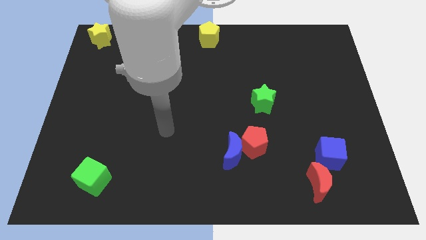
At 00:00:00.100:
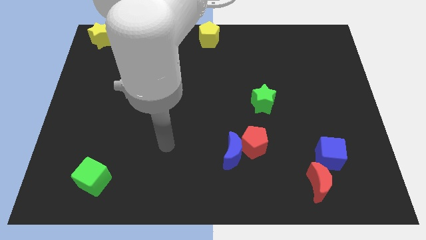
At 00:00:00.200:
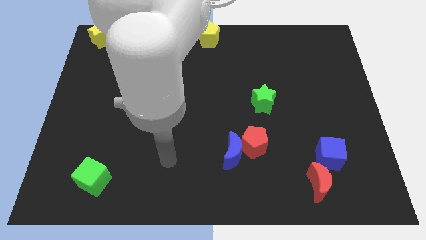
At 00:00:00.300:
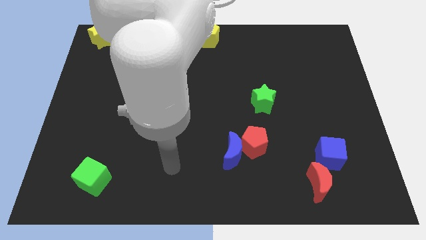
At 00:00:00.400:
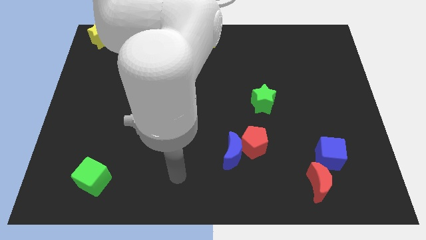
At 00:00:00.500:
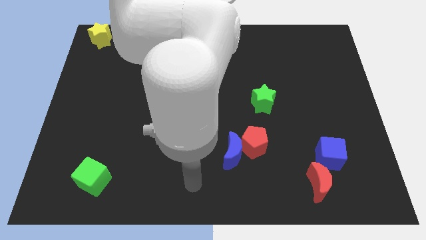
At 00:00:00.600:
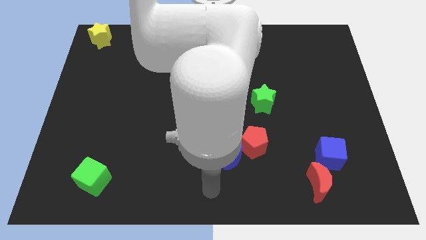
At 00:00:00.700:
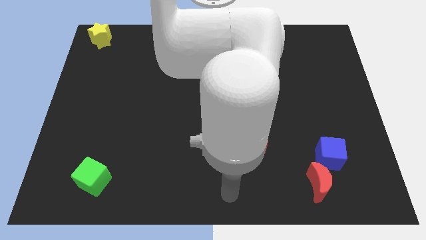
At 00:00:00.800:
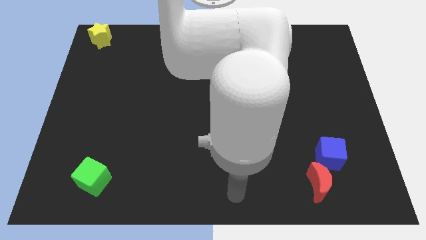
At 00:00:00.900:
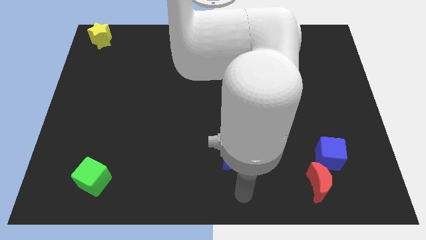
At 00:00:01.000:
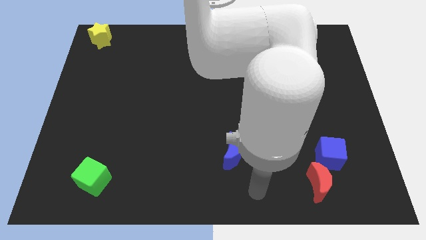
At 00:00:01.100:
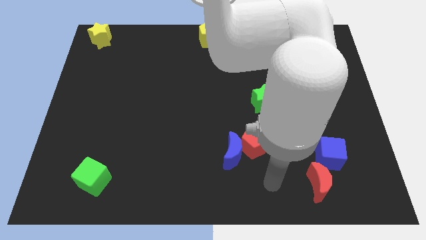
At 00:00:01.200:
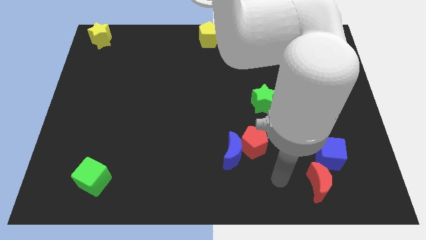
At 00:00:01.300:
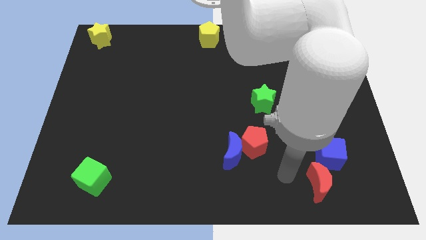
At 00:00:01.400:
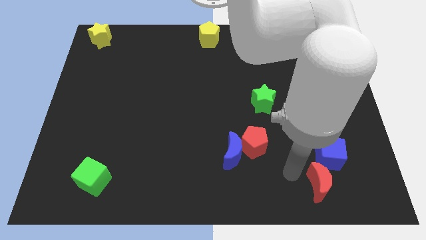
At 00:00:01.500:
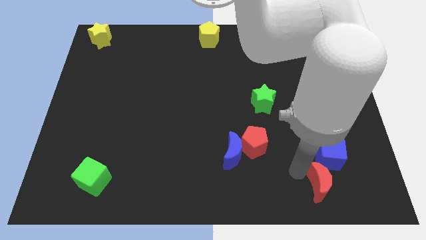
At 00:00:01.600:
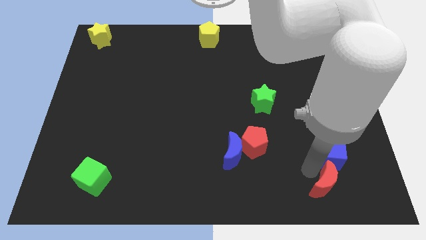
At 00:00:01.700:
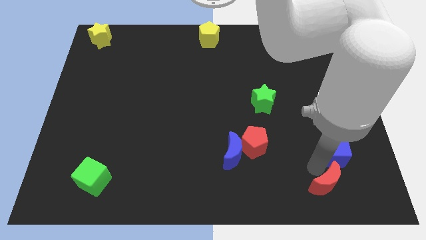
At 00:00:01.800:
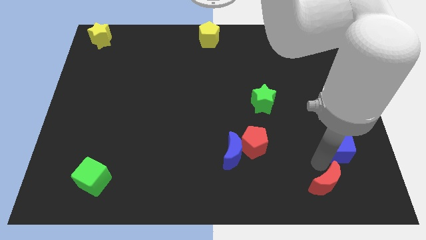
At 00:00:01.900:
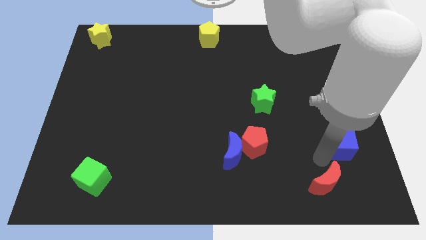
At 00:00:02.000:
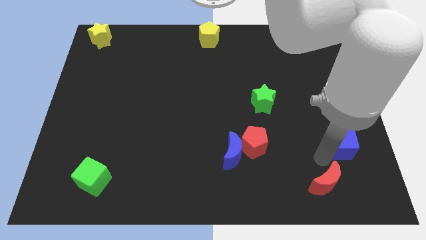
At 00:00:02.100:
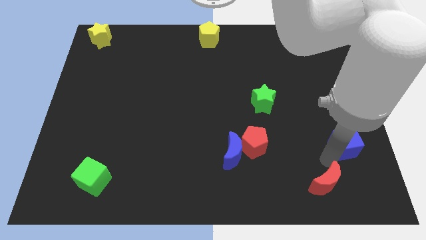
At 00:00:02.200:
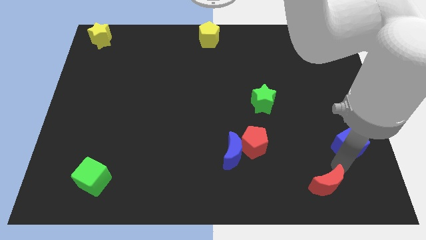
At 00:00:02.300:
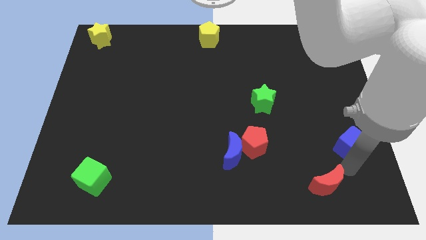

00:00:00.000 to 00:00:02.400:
push the blue cube slightly to the right

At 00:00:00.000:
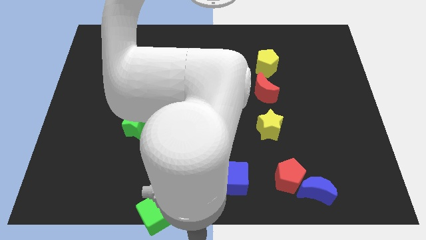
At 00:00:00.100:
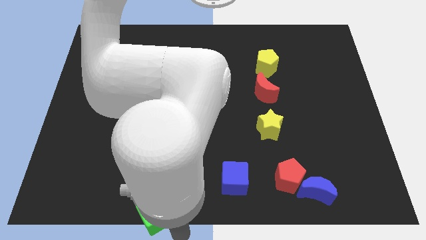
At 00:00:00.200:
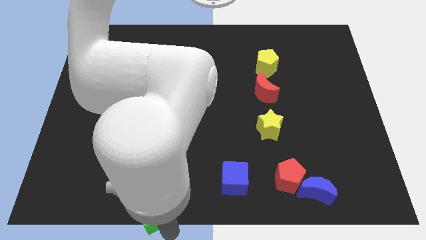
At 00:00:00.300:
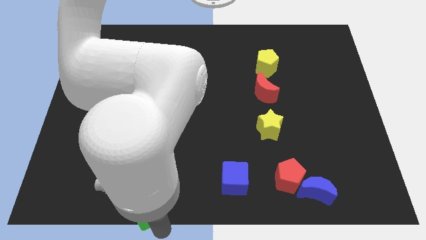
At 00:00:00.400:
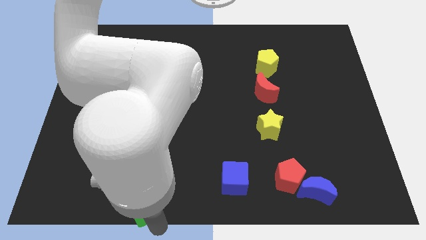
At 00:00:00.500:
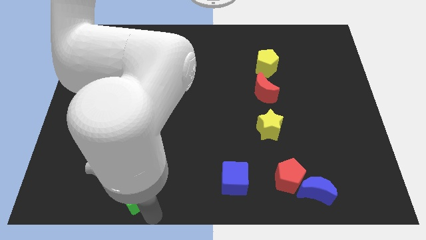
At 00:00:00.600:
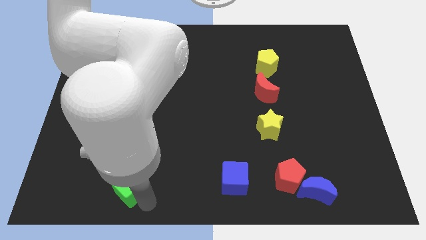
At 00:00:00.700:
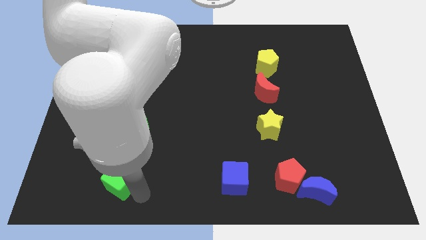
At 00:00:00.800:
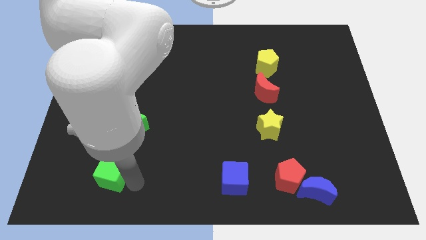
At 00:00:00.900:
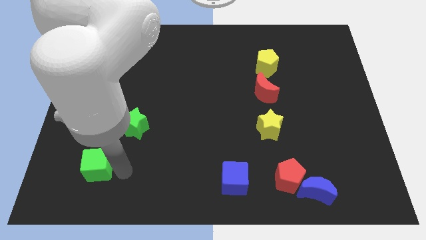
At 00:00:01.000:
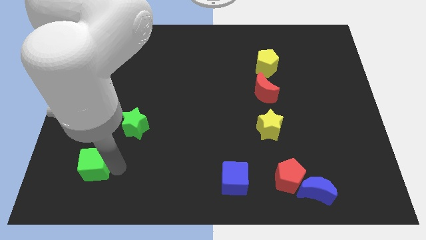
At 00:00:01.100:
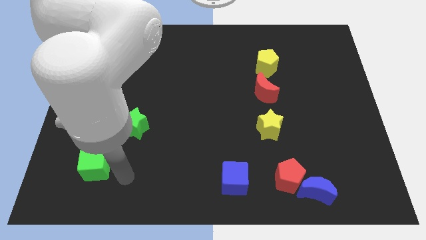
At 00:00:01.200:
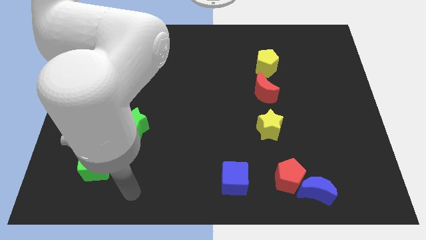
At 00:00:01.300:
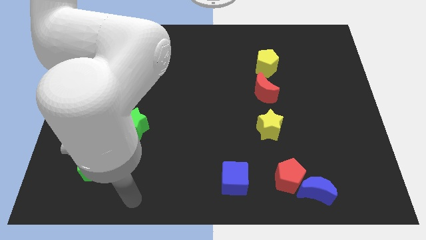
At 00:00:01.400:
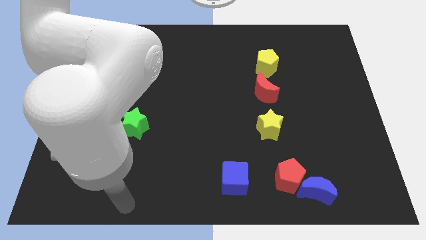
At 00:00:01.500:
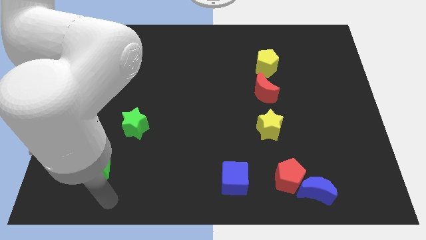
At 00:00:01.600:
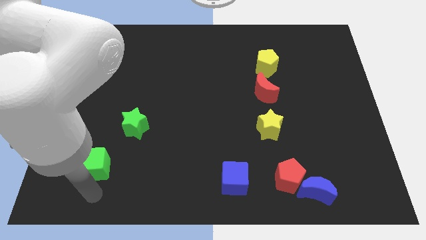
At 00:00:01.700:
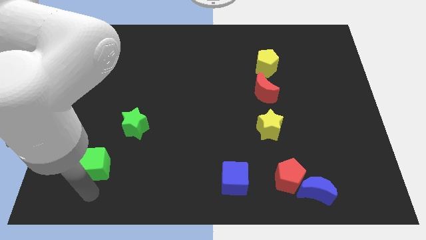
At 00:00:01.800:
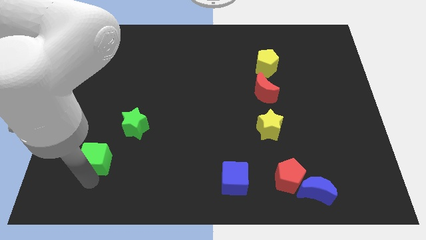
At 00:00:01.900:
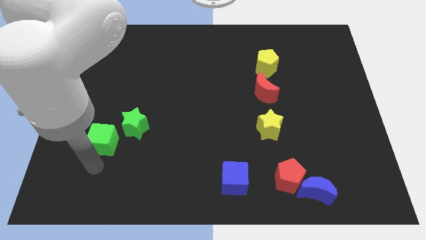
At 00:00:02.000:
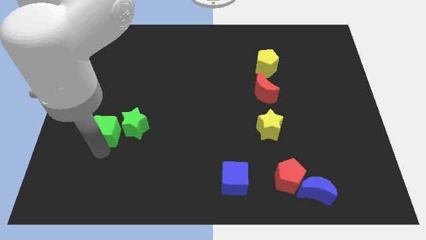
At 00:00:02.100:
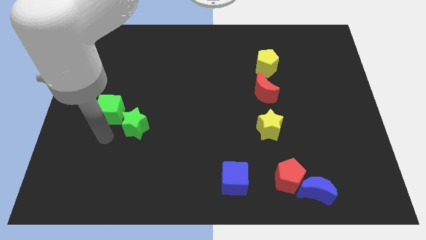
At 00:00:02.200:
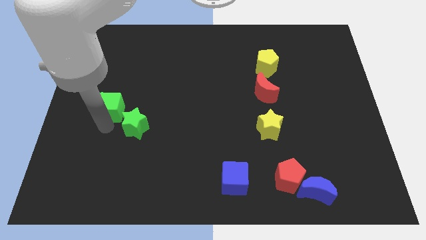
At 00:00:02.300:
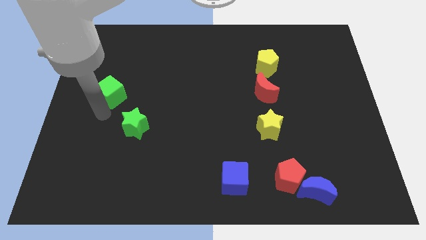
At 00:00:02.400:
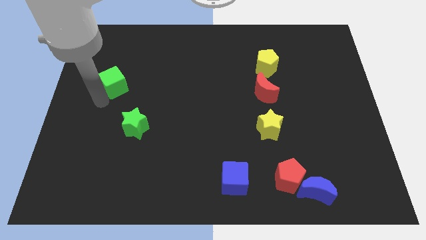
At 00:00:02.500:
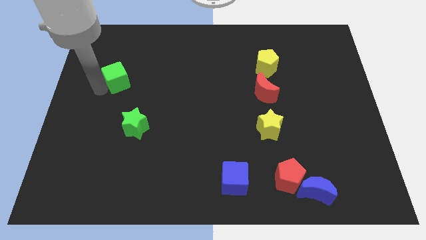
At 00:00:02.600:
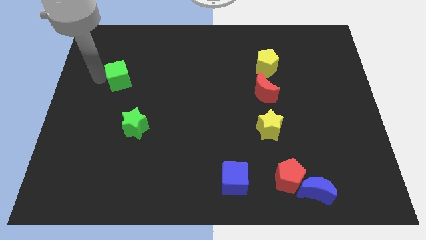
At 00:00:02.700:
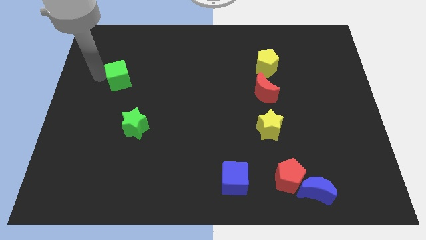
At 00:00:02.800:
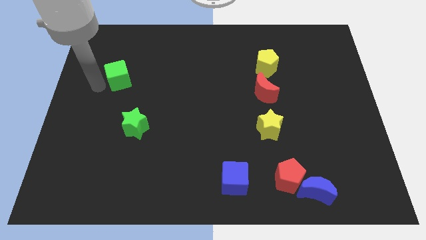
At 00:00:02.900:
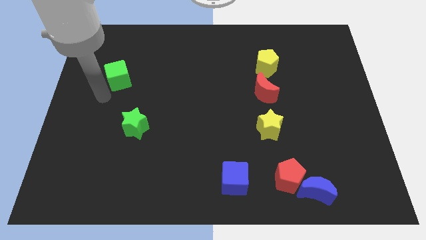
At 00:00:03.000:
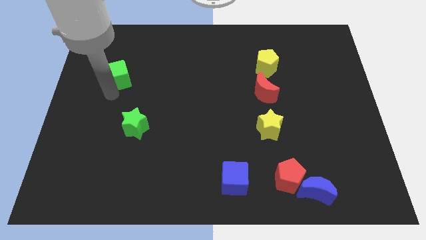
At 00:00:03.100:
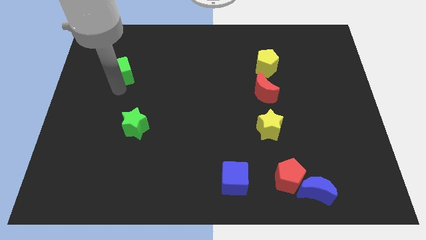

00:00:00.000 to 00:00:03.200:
place the green cube above the green star

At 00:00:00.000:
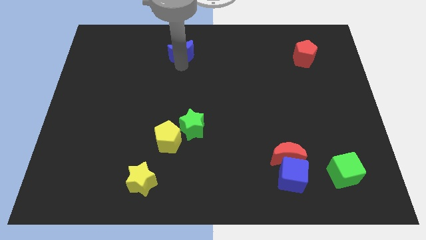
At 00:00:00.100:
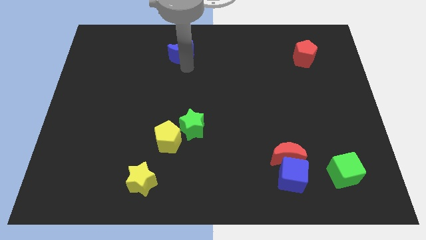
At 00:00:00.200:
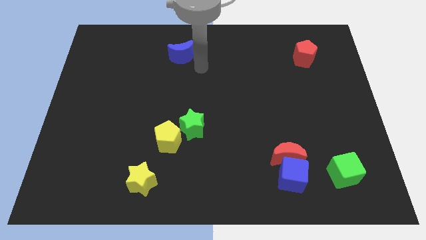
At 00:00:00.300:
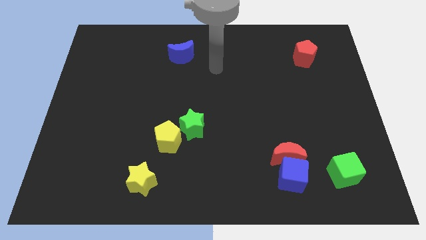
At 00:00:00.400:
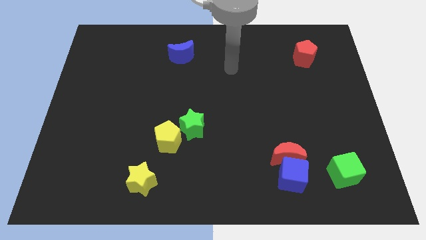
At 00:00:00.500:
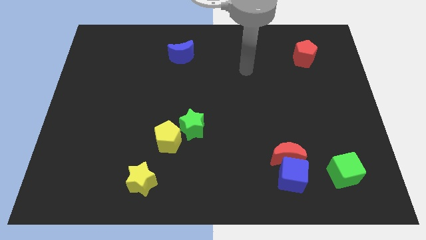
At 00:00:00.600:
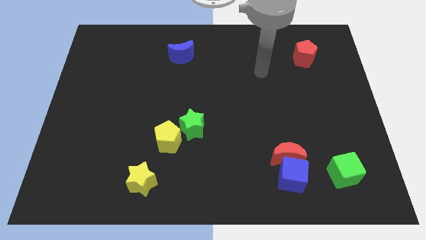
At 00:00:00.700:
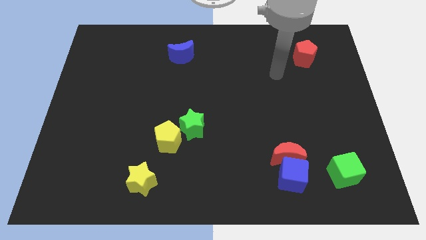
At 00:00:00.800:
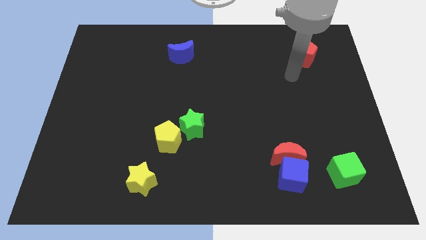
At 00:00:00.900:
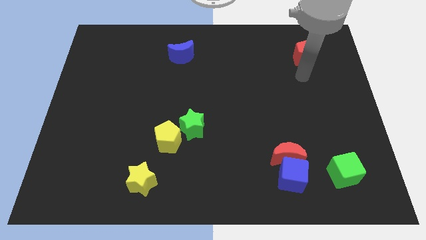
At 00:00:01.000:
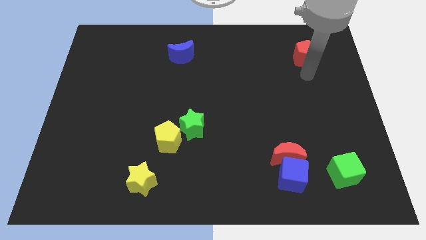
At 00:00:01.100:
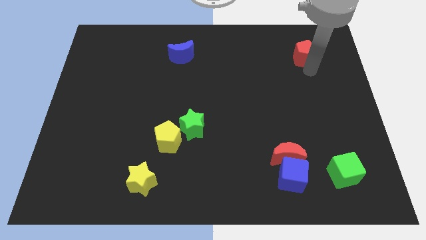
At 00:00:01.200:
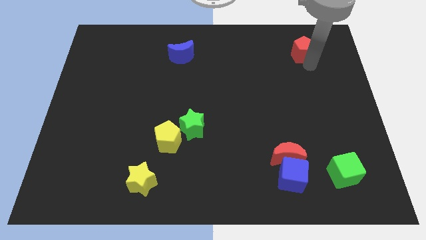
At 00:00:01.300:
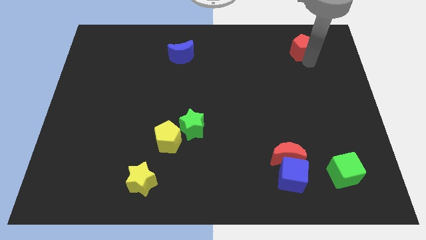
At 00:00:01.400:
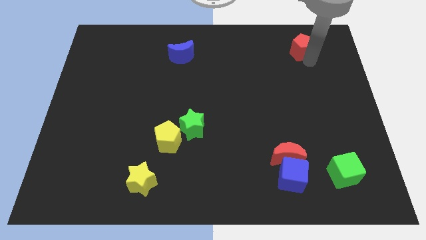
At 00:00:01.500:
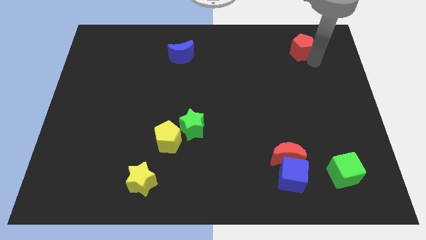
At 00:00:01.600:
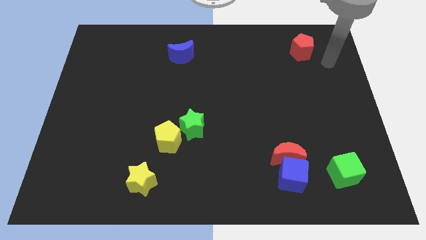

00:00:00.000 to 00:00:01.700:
move the arm away from the blue moon

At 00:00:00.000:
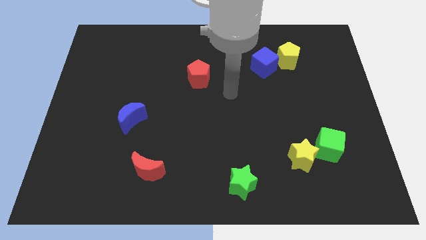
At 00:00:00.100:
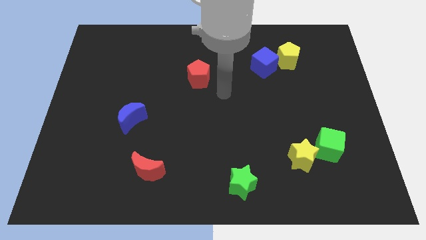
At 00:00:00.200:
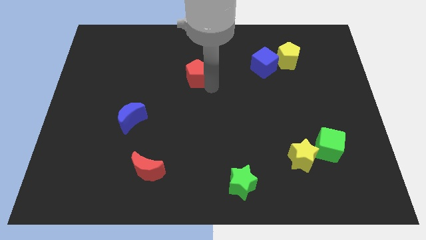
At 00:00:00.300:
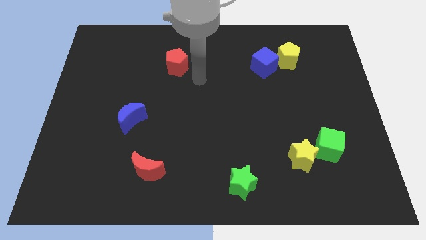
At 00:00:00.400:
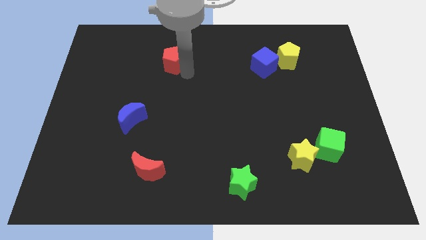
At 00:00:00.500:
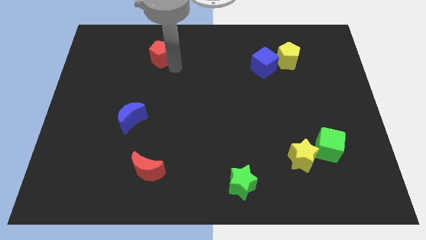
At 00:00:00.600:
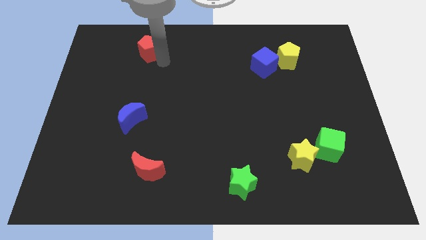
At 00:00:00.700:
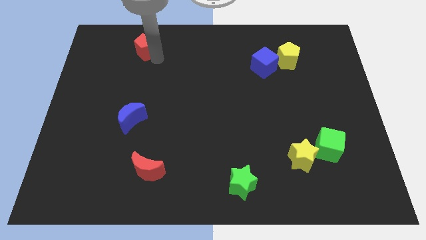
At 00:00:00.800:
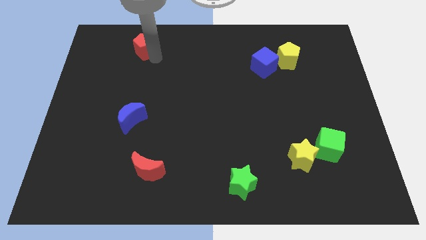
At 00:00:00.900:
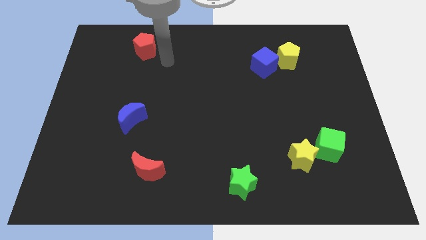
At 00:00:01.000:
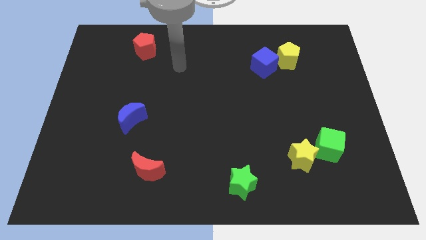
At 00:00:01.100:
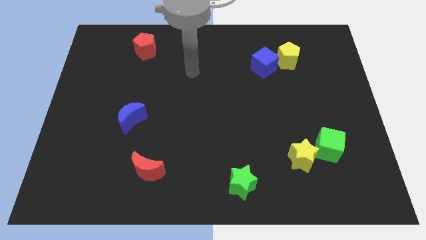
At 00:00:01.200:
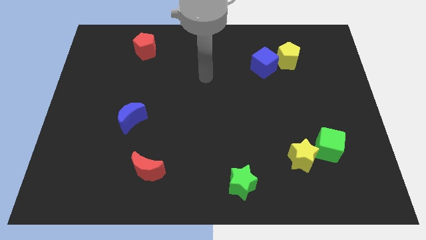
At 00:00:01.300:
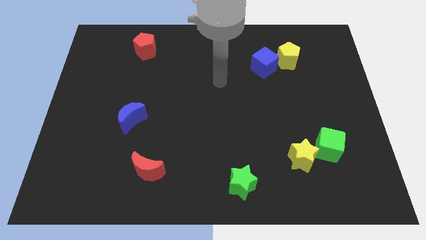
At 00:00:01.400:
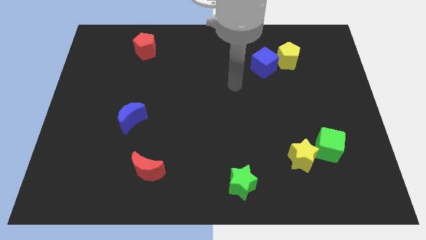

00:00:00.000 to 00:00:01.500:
push the red crescent towards the top left corner of the board

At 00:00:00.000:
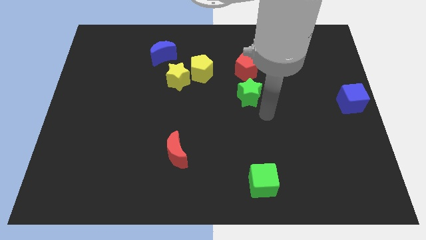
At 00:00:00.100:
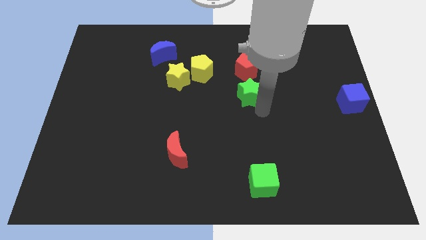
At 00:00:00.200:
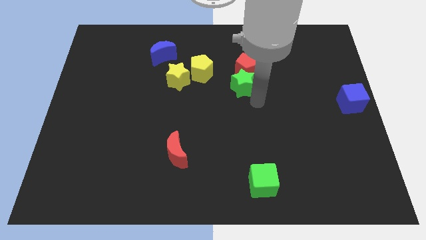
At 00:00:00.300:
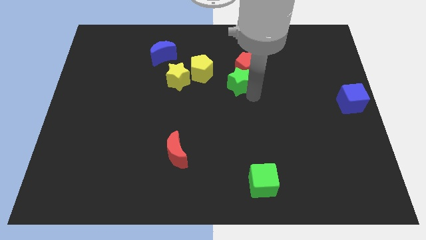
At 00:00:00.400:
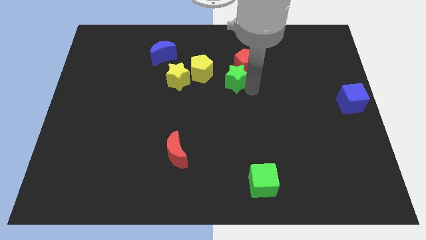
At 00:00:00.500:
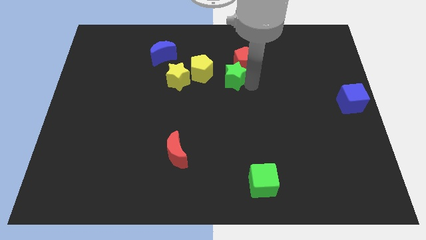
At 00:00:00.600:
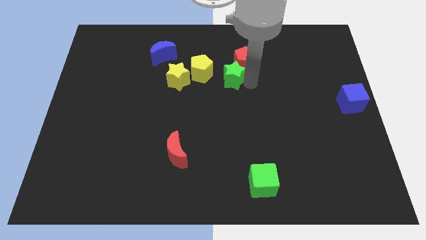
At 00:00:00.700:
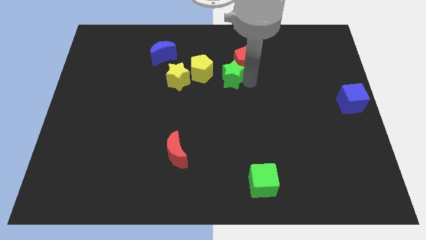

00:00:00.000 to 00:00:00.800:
push the green star slightly towards up
